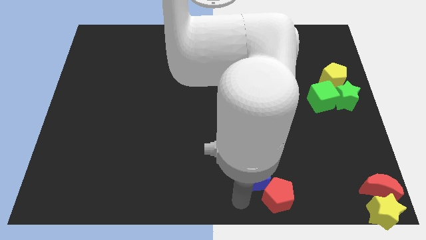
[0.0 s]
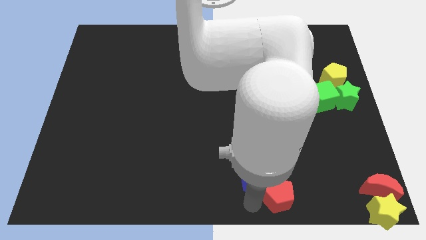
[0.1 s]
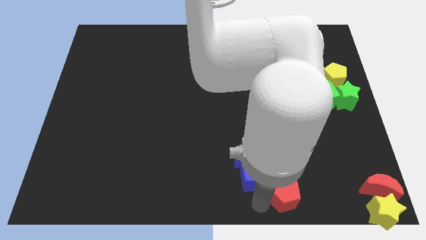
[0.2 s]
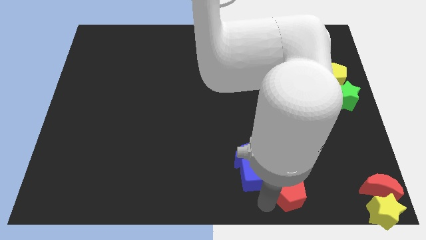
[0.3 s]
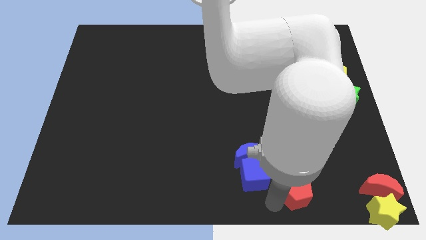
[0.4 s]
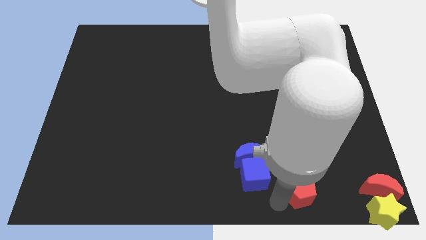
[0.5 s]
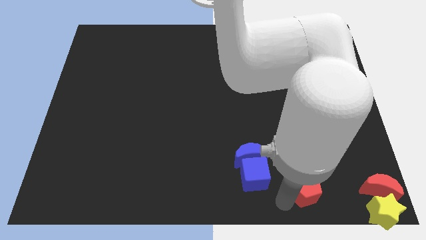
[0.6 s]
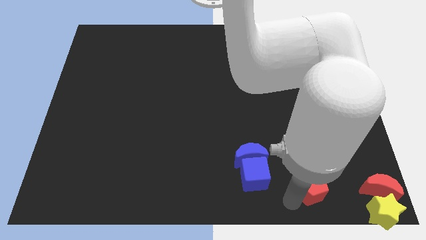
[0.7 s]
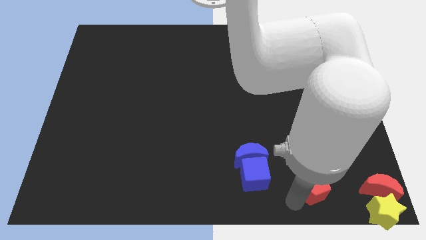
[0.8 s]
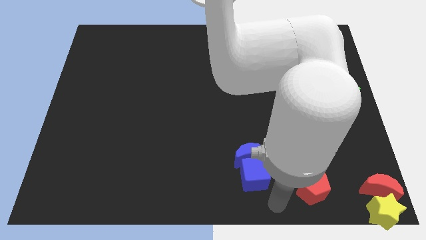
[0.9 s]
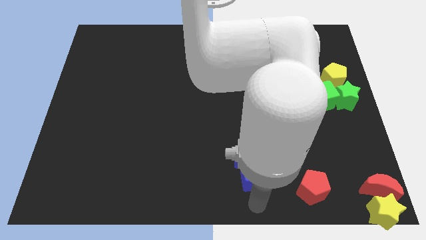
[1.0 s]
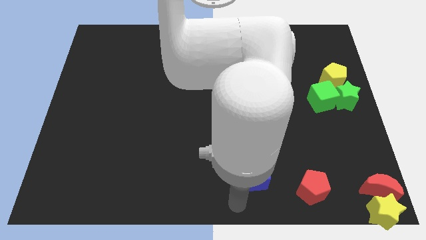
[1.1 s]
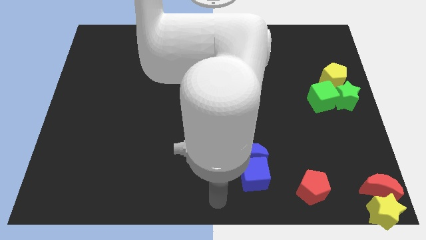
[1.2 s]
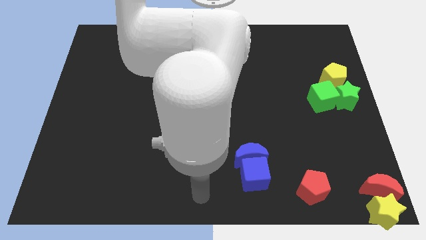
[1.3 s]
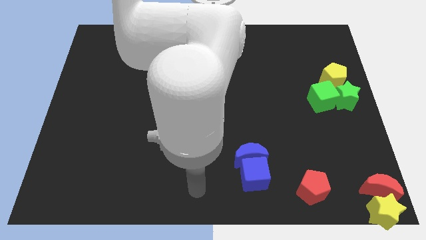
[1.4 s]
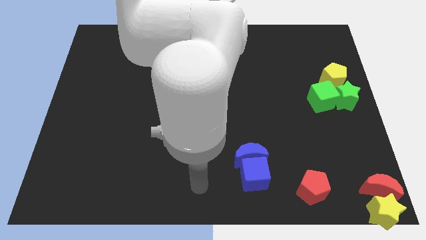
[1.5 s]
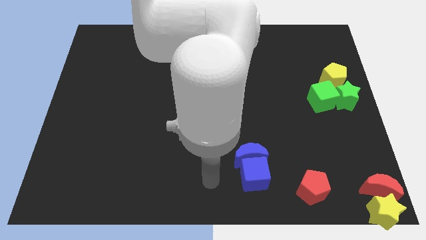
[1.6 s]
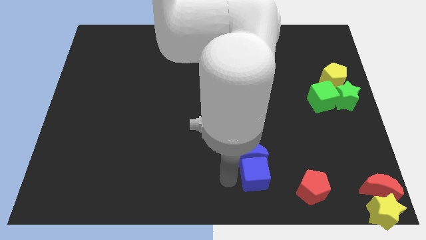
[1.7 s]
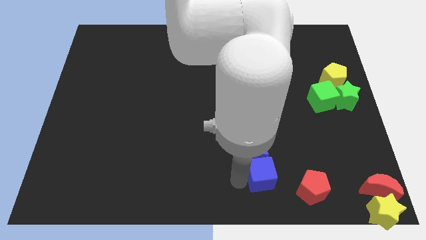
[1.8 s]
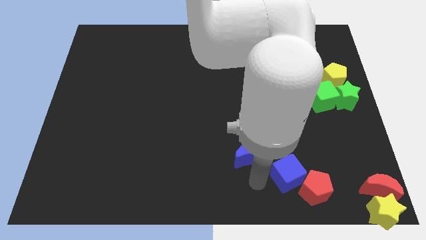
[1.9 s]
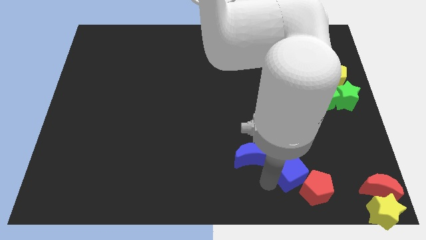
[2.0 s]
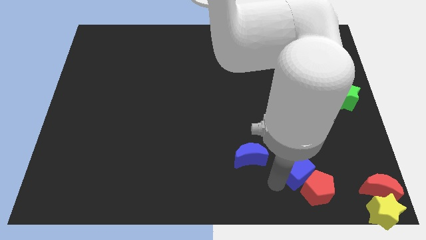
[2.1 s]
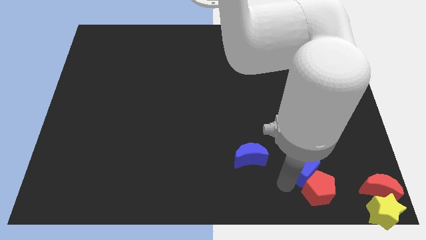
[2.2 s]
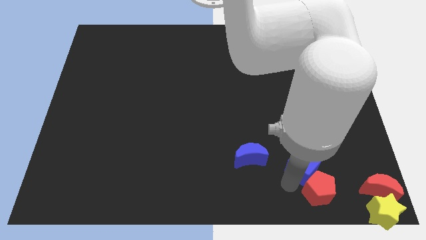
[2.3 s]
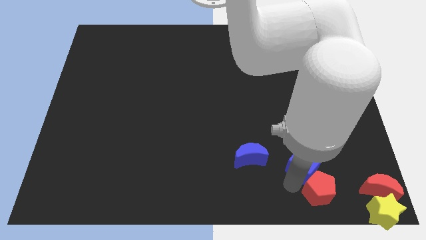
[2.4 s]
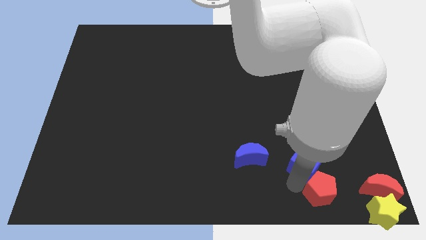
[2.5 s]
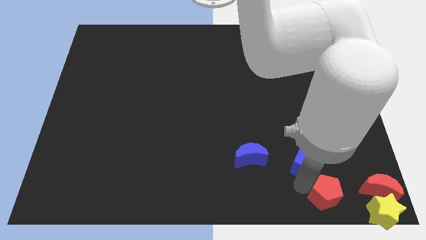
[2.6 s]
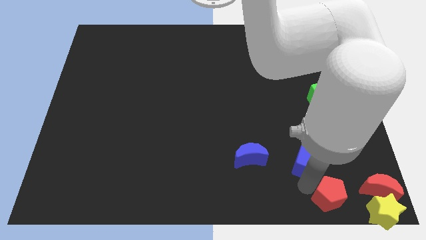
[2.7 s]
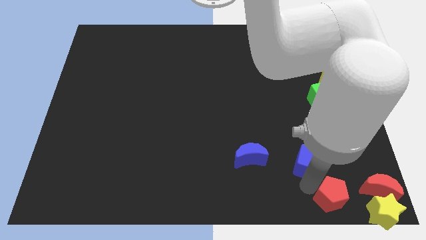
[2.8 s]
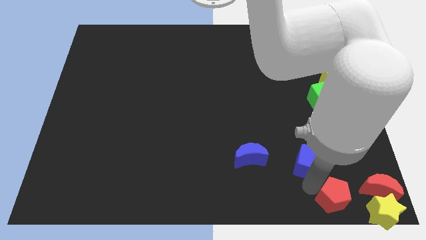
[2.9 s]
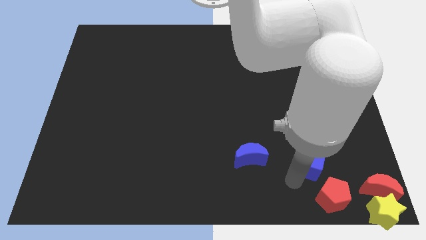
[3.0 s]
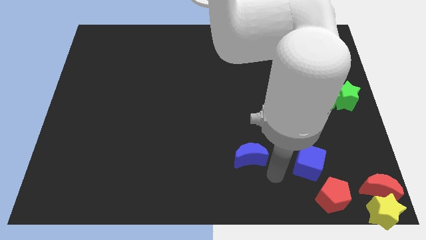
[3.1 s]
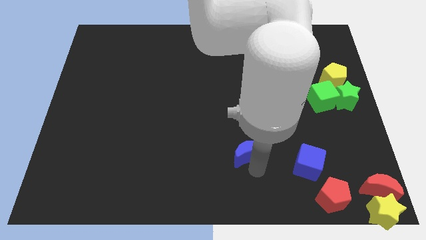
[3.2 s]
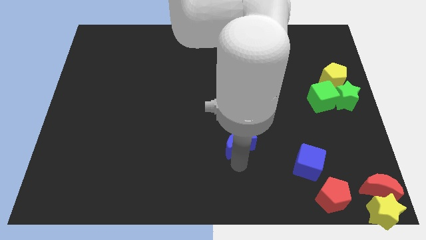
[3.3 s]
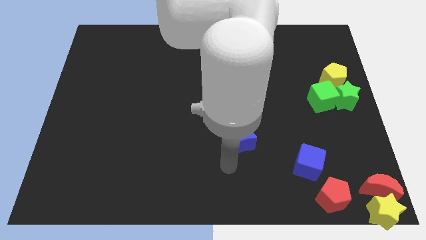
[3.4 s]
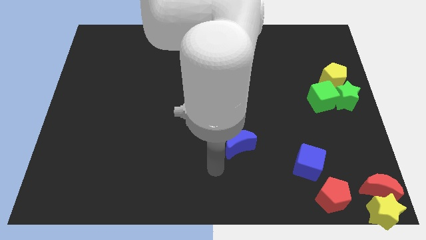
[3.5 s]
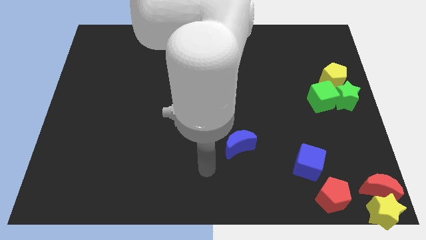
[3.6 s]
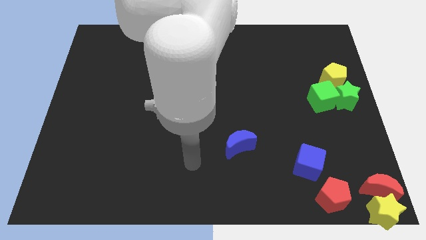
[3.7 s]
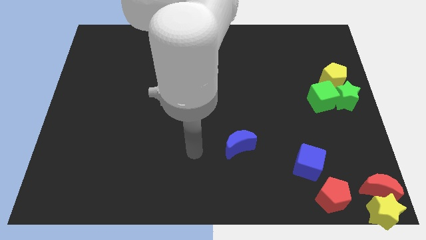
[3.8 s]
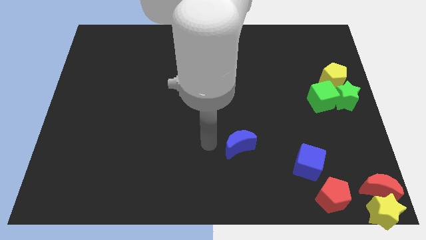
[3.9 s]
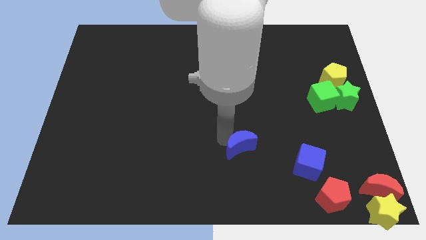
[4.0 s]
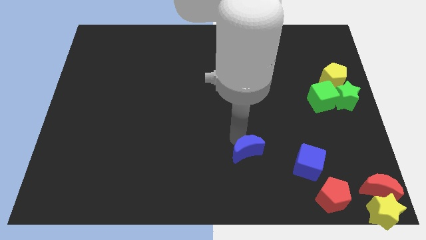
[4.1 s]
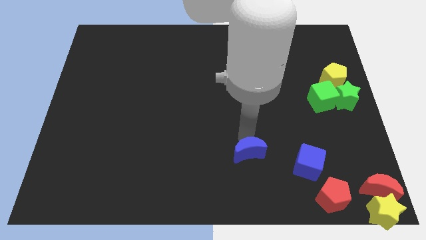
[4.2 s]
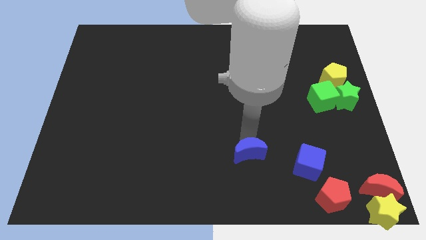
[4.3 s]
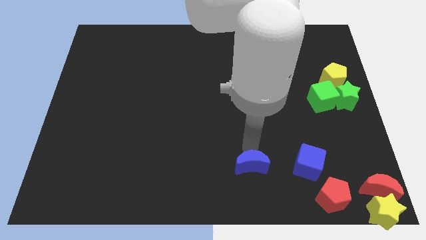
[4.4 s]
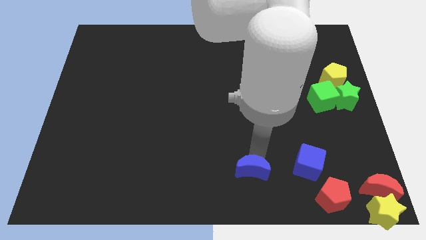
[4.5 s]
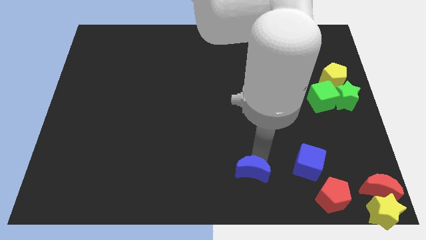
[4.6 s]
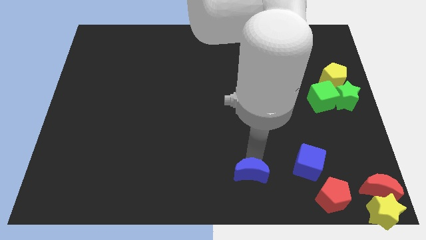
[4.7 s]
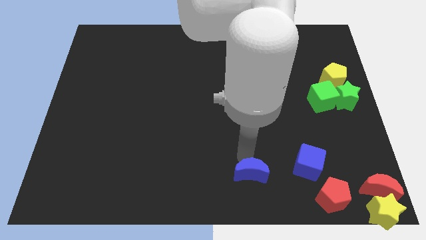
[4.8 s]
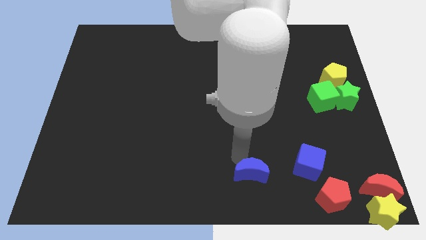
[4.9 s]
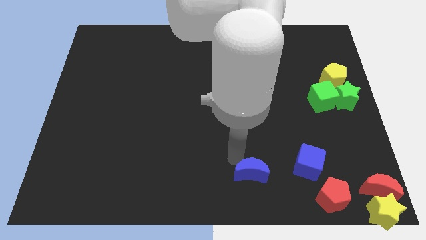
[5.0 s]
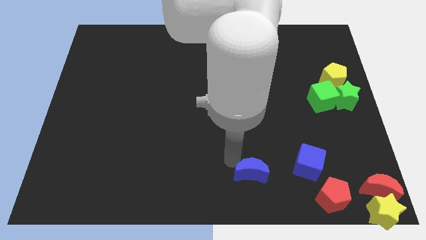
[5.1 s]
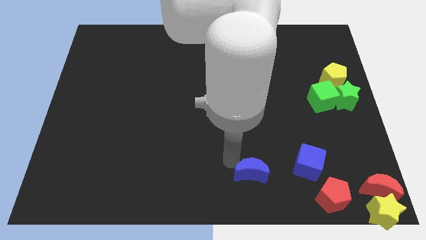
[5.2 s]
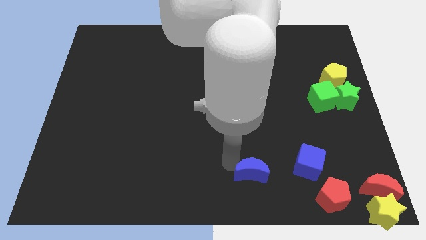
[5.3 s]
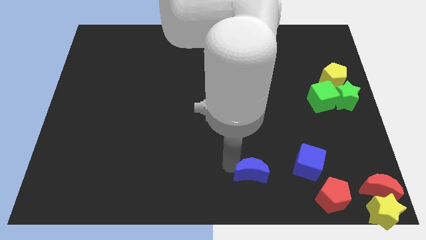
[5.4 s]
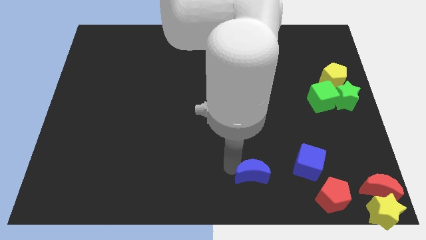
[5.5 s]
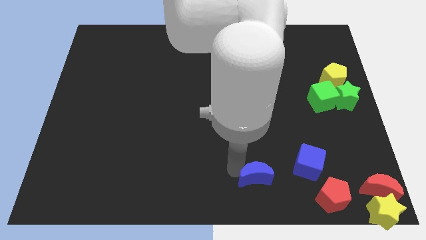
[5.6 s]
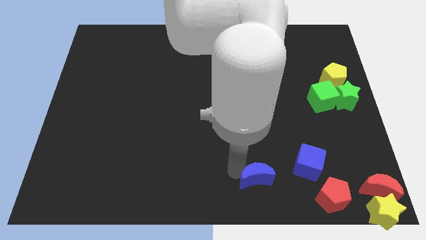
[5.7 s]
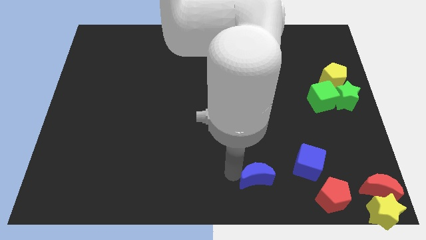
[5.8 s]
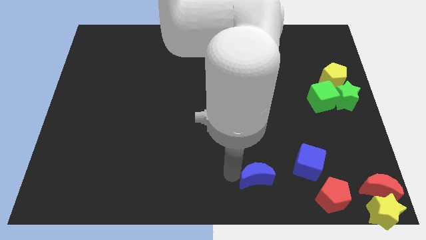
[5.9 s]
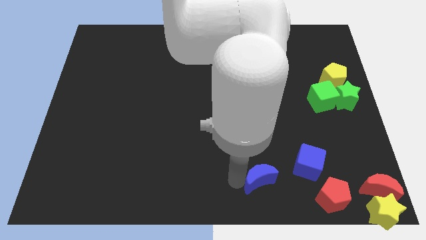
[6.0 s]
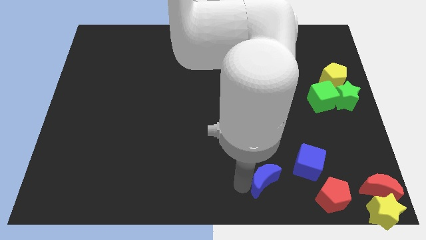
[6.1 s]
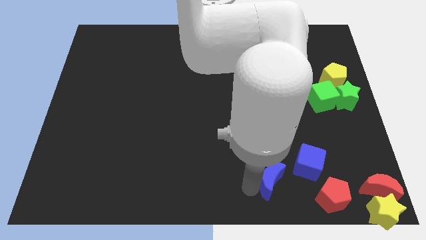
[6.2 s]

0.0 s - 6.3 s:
make a triangle with blue blocks and the red pentagon

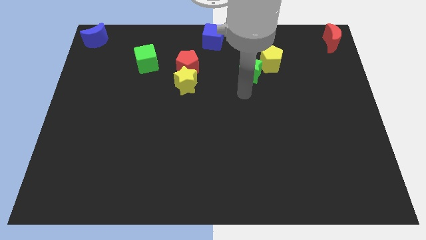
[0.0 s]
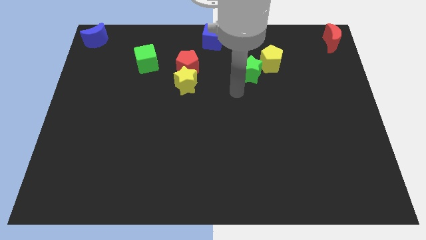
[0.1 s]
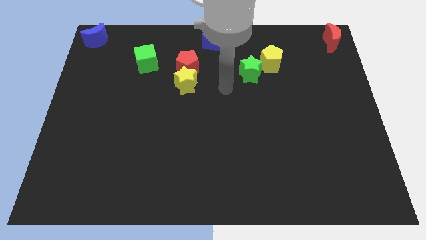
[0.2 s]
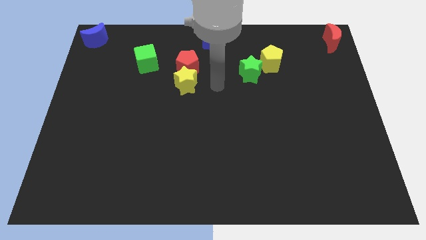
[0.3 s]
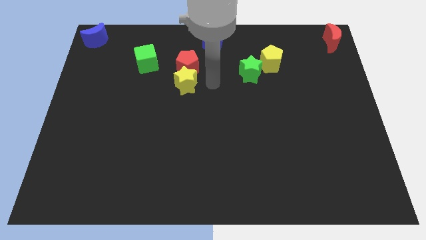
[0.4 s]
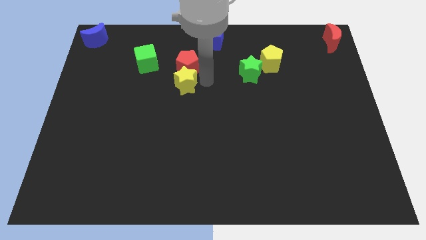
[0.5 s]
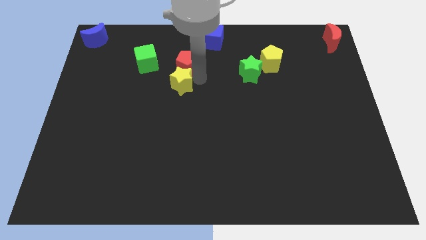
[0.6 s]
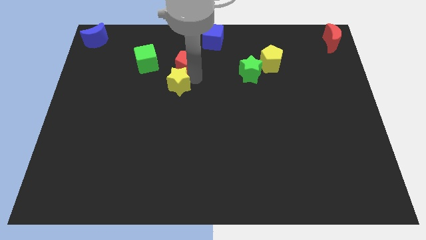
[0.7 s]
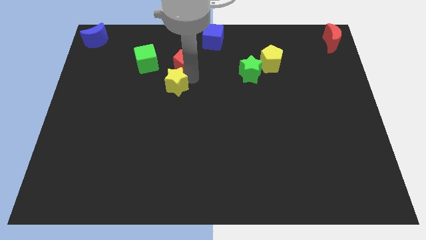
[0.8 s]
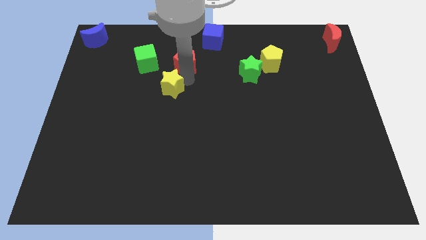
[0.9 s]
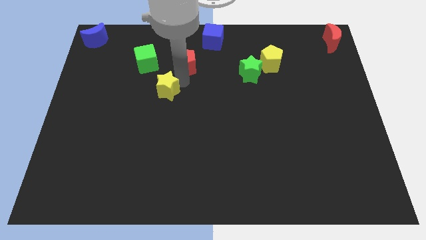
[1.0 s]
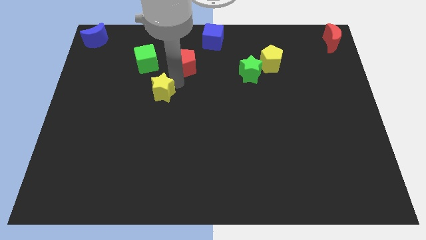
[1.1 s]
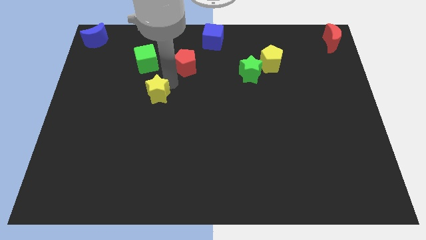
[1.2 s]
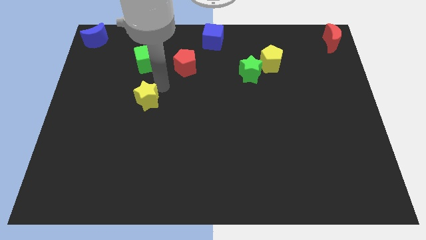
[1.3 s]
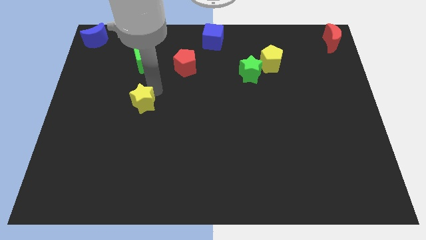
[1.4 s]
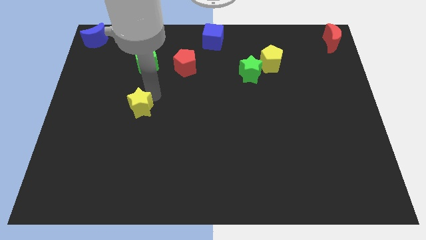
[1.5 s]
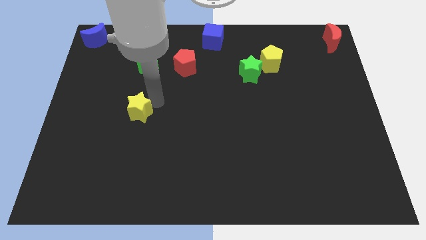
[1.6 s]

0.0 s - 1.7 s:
separate the yellow star and the red pentagon

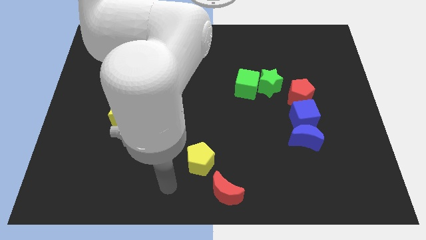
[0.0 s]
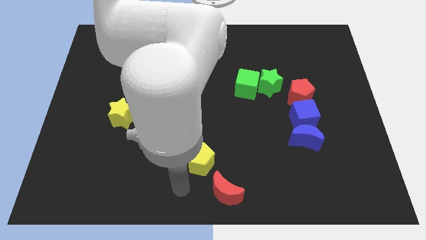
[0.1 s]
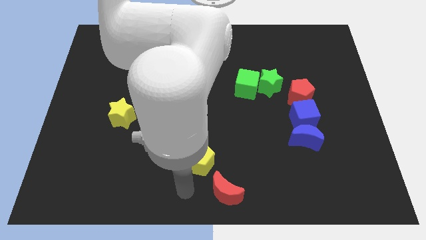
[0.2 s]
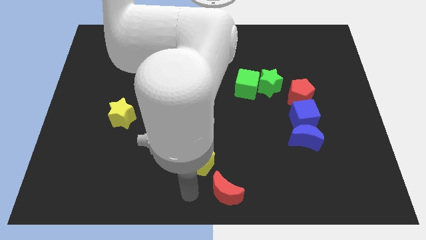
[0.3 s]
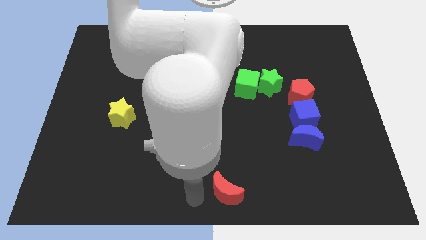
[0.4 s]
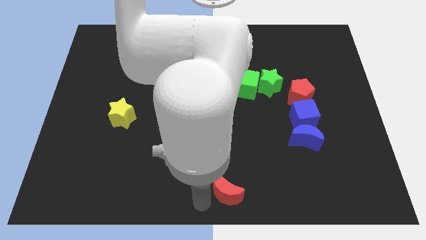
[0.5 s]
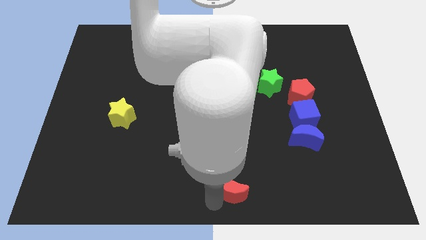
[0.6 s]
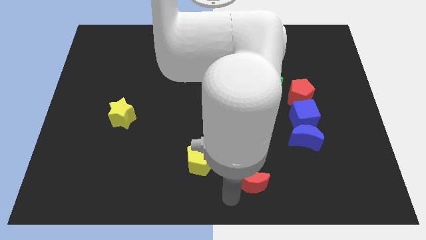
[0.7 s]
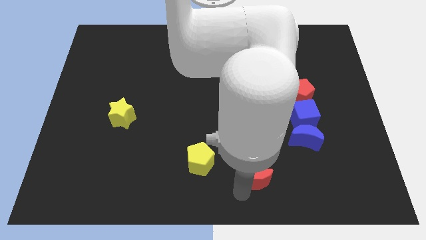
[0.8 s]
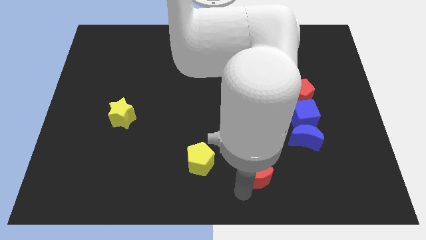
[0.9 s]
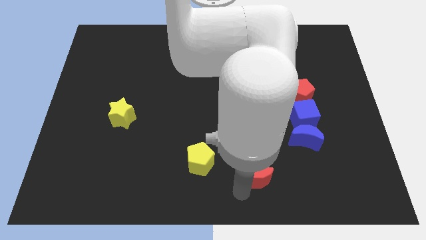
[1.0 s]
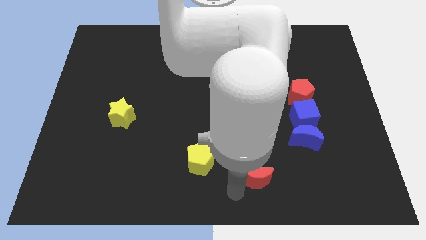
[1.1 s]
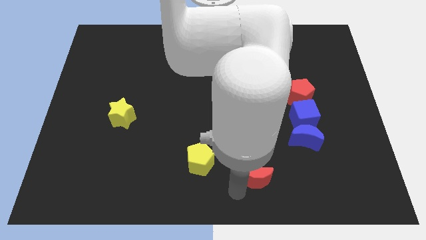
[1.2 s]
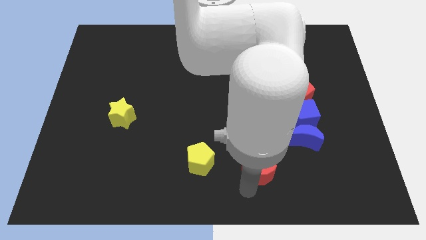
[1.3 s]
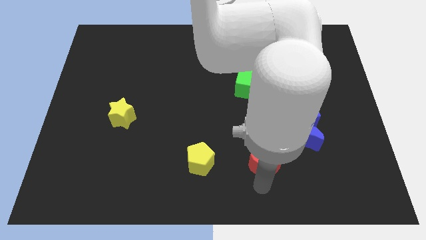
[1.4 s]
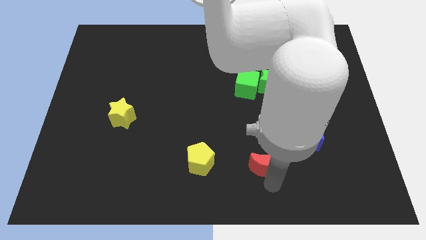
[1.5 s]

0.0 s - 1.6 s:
push the red crescent to the right of the yellow pentagon
